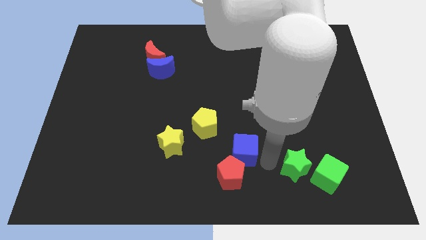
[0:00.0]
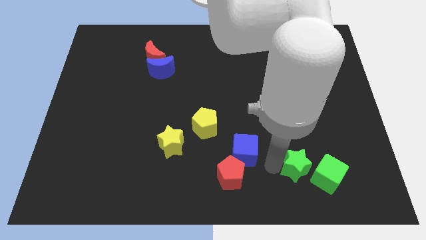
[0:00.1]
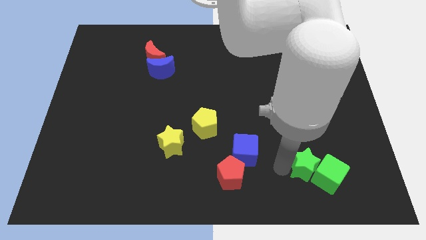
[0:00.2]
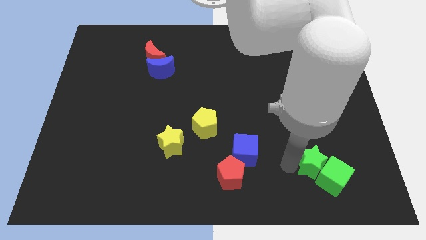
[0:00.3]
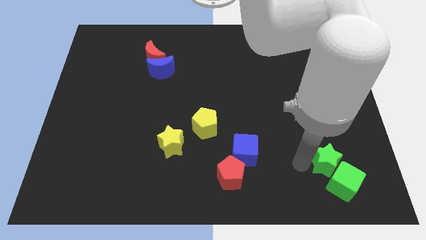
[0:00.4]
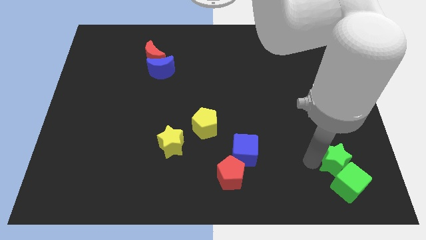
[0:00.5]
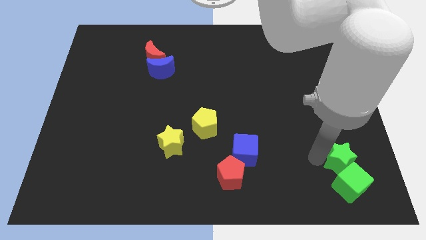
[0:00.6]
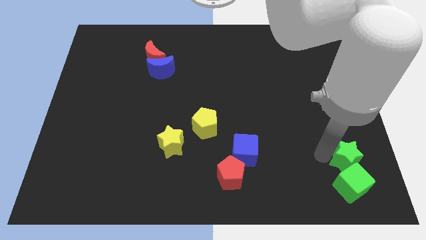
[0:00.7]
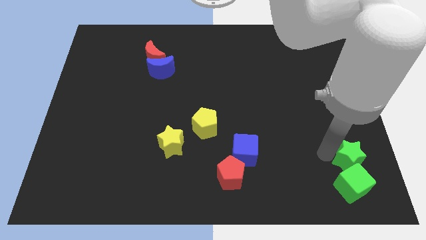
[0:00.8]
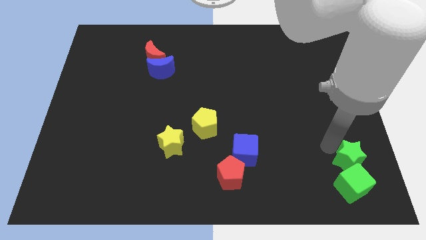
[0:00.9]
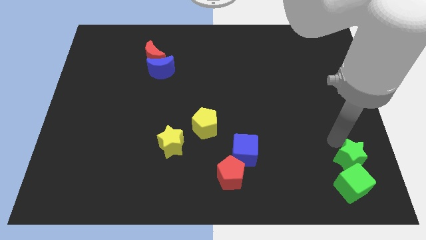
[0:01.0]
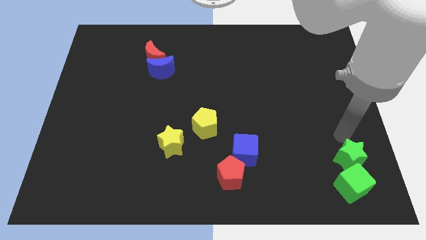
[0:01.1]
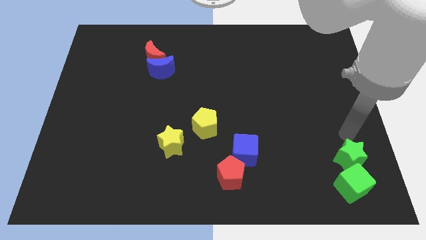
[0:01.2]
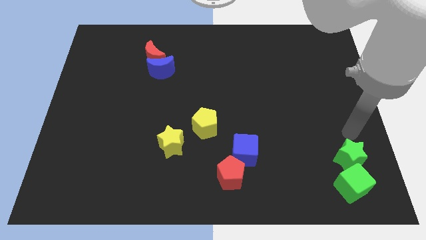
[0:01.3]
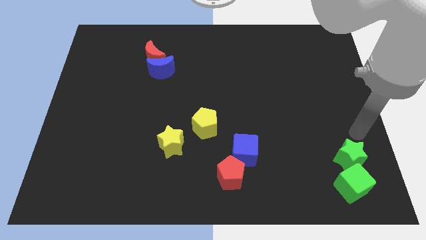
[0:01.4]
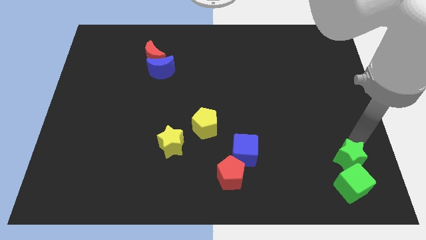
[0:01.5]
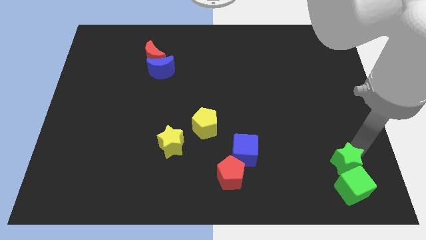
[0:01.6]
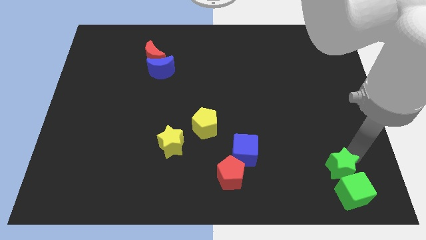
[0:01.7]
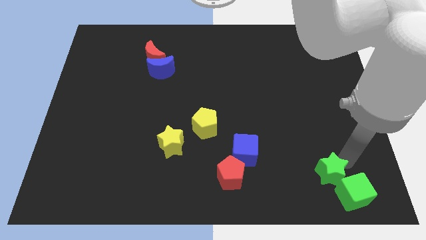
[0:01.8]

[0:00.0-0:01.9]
push the green blocks towards the bottom right corner

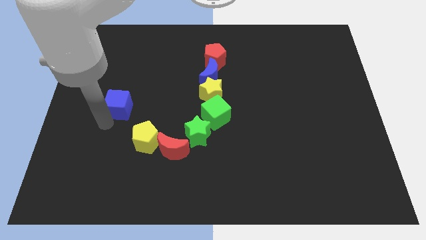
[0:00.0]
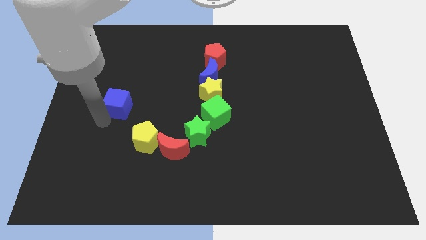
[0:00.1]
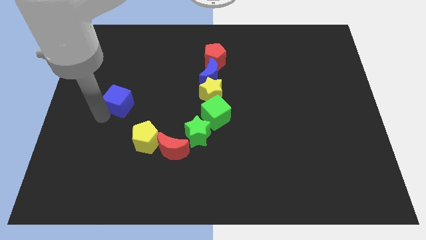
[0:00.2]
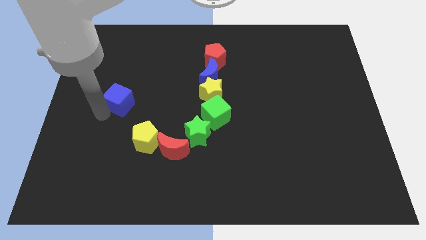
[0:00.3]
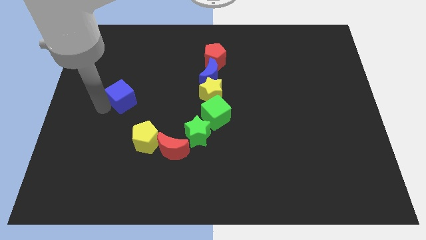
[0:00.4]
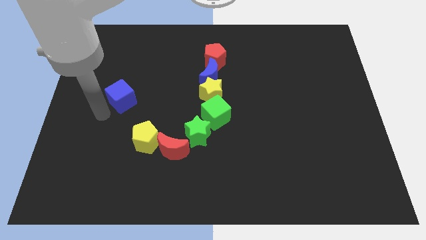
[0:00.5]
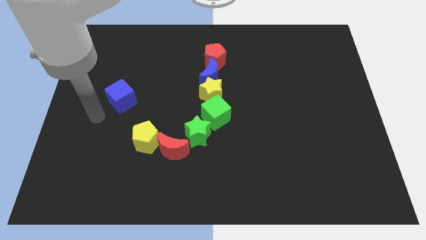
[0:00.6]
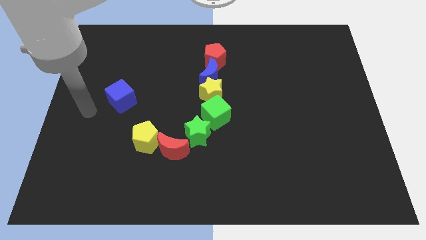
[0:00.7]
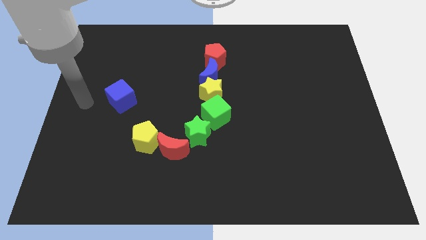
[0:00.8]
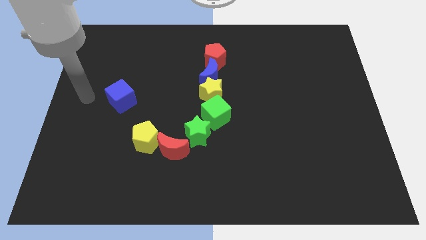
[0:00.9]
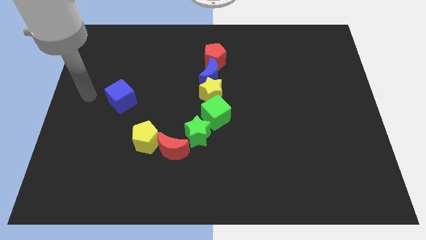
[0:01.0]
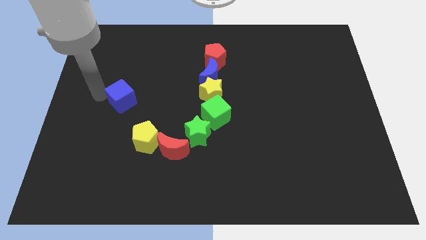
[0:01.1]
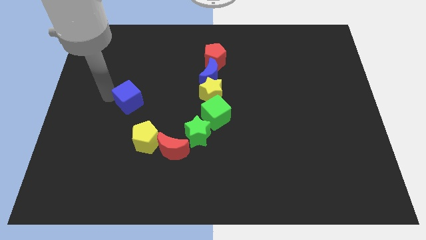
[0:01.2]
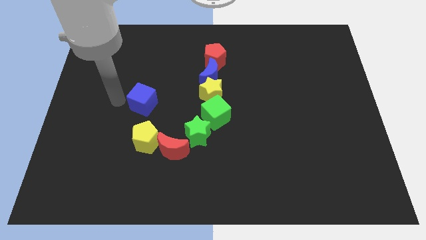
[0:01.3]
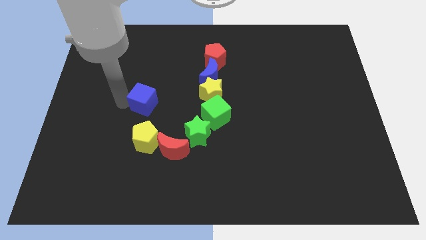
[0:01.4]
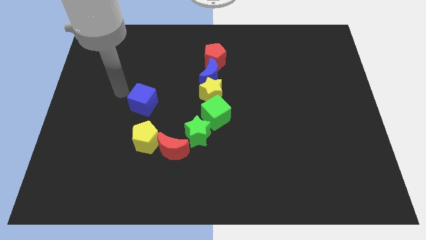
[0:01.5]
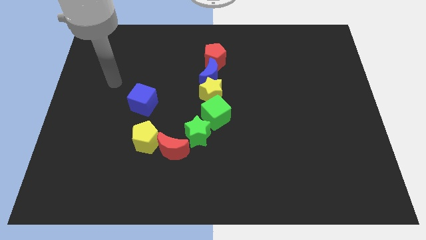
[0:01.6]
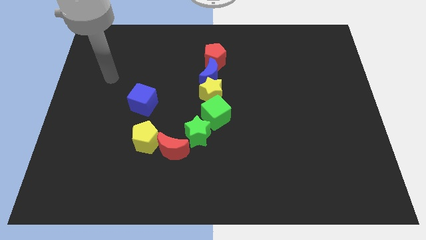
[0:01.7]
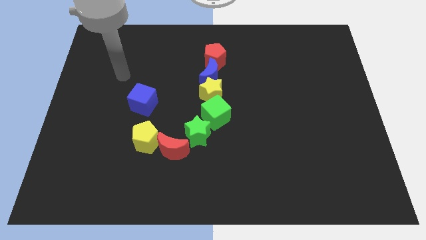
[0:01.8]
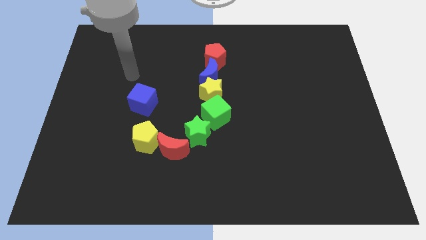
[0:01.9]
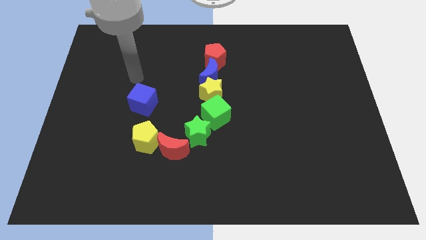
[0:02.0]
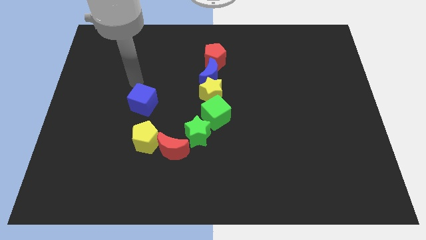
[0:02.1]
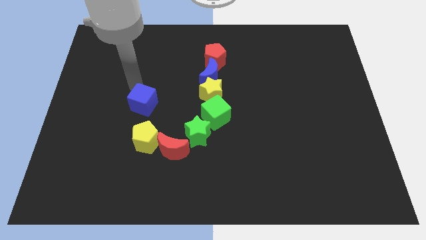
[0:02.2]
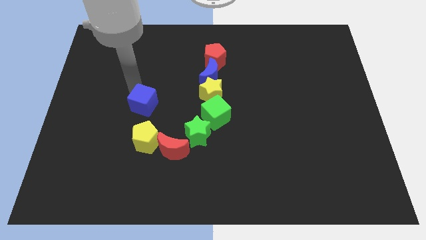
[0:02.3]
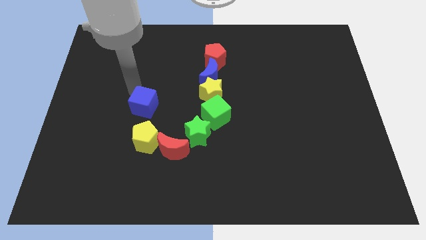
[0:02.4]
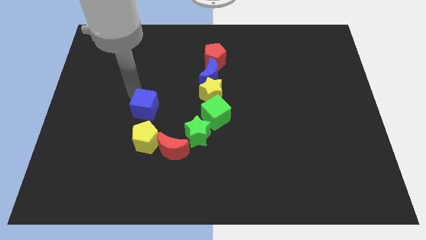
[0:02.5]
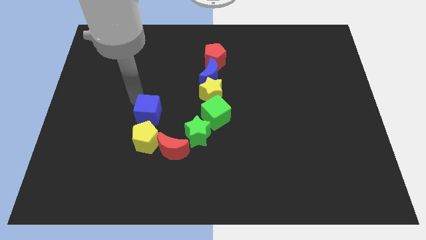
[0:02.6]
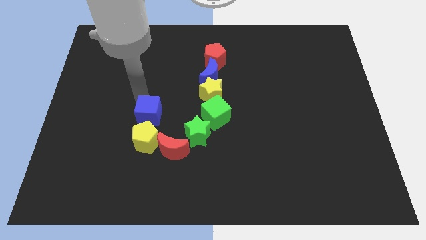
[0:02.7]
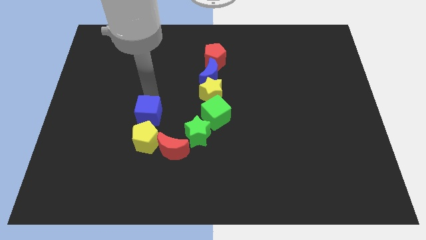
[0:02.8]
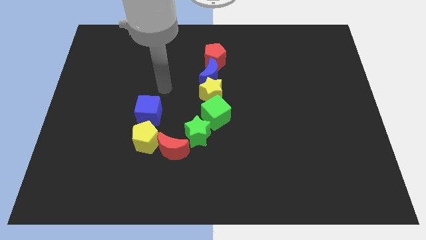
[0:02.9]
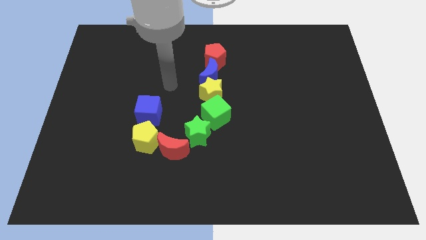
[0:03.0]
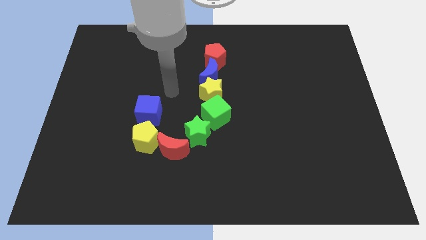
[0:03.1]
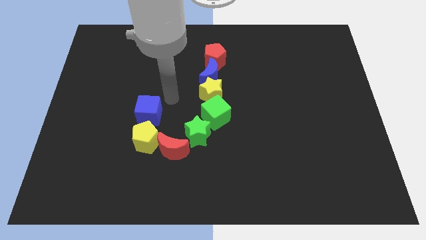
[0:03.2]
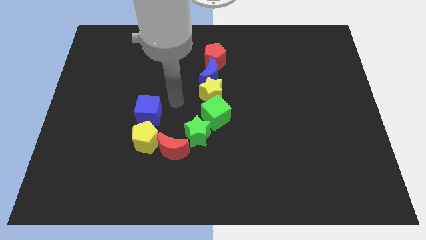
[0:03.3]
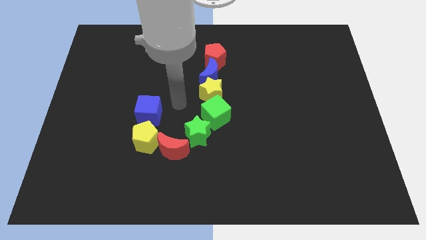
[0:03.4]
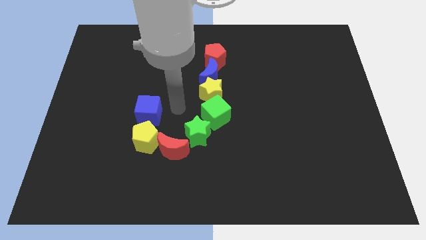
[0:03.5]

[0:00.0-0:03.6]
push the blue cube above the yellow pentagon

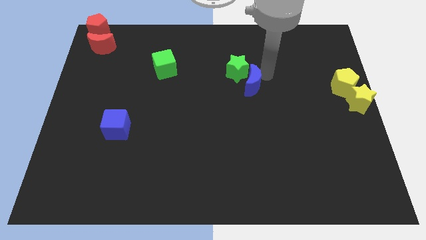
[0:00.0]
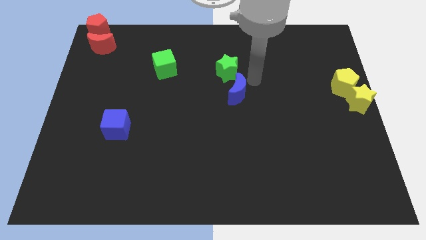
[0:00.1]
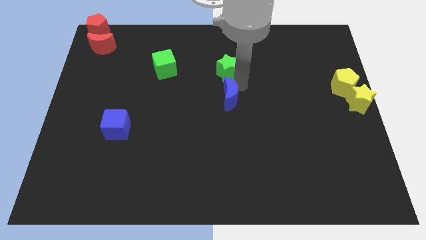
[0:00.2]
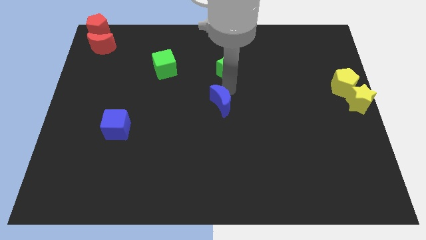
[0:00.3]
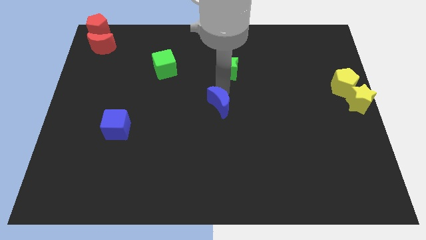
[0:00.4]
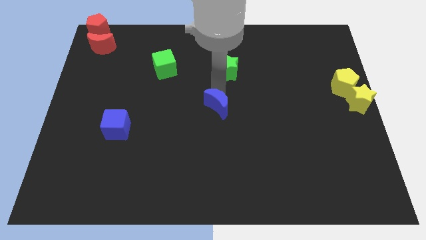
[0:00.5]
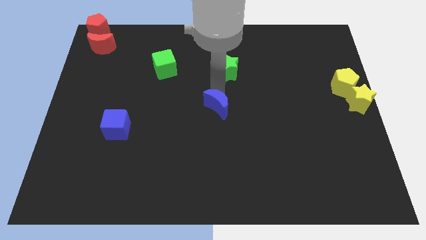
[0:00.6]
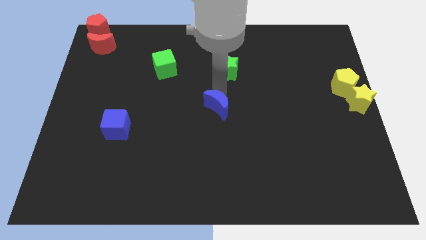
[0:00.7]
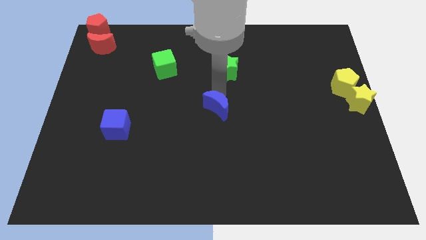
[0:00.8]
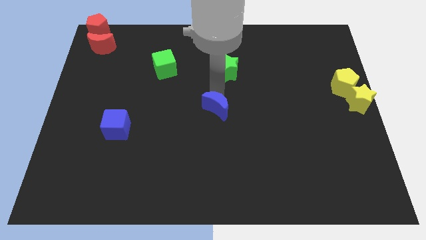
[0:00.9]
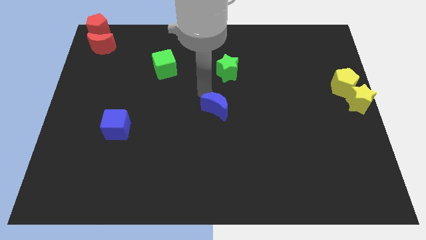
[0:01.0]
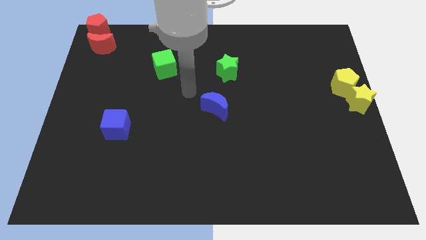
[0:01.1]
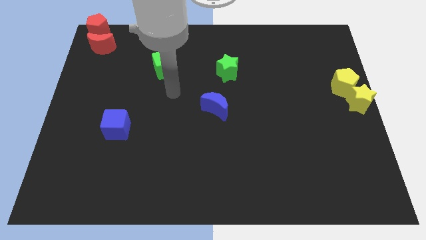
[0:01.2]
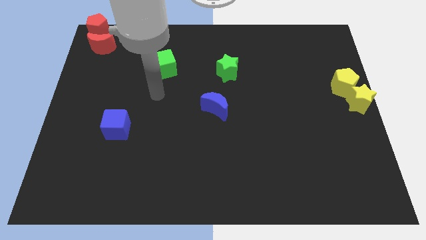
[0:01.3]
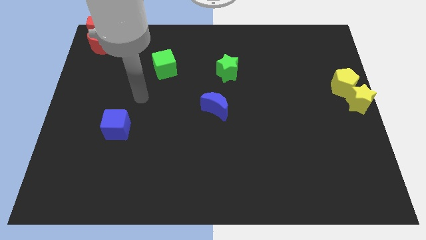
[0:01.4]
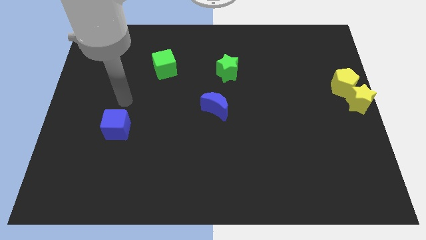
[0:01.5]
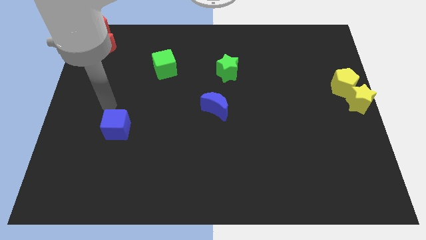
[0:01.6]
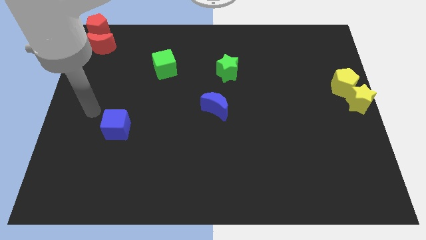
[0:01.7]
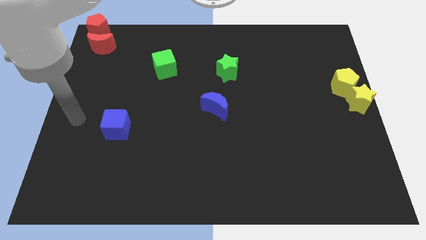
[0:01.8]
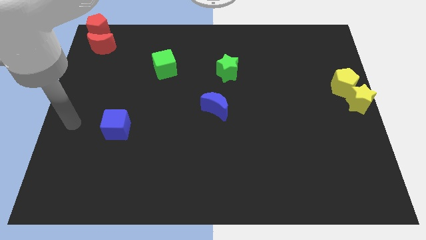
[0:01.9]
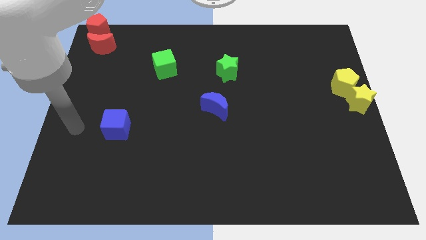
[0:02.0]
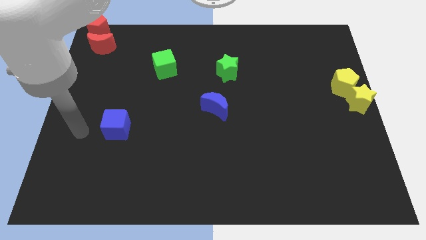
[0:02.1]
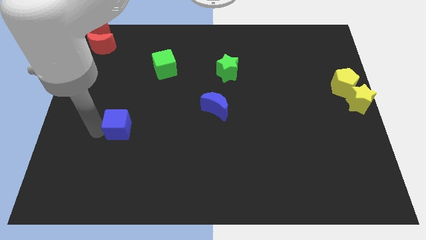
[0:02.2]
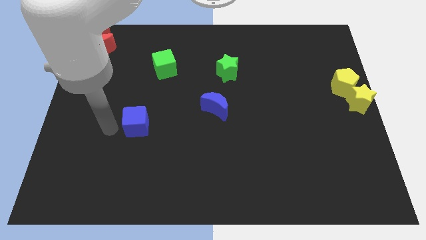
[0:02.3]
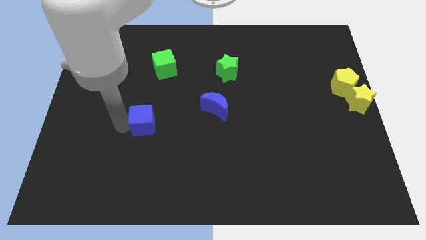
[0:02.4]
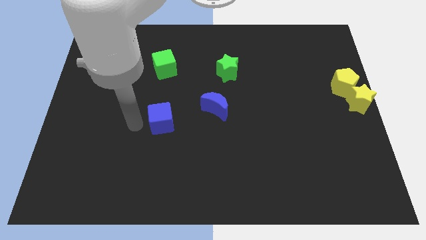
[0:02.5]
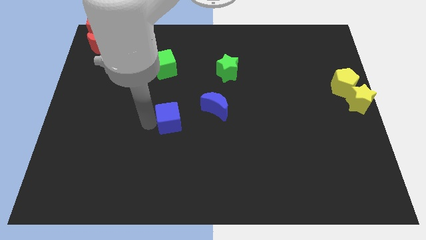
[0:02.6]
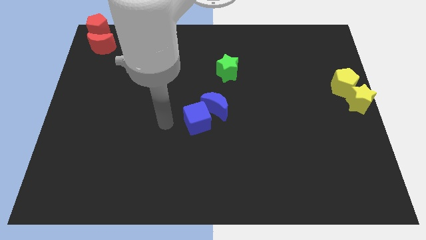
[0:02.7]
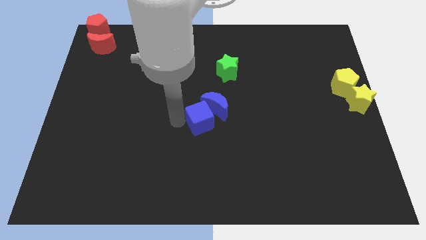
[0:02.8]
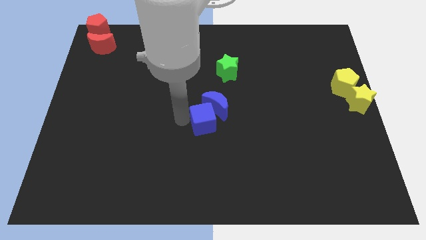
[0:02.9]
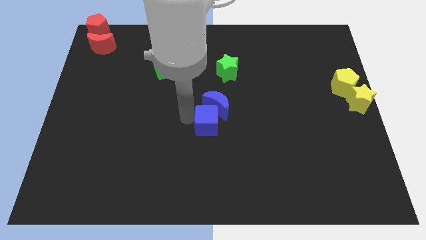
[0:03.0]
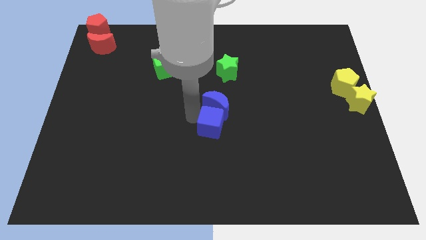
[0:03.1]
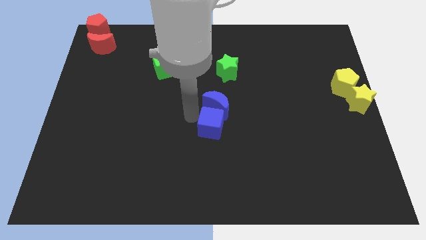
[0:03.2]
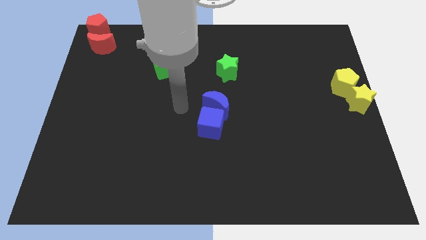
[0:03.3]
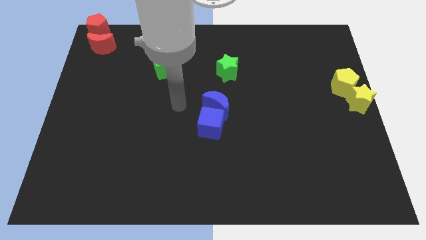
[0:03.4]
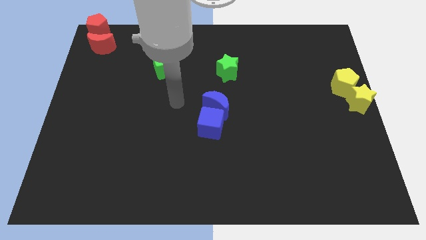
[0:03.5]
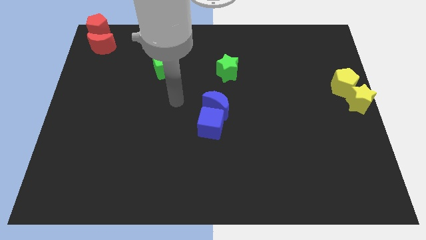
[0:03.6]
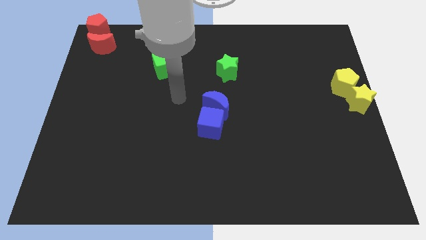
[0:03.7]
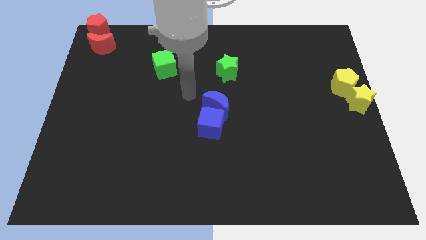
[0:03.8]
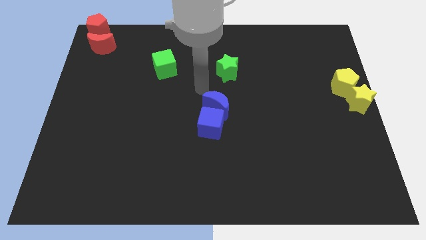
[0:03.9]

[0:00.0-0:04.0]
place blue blocks at the center
